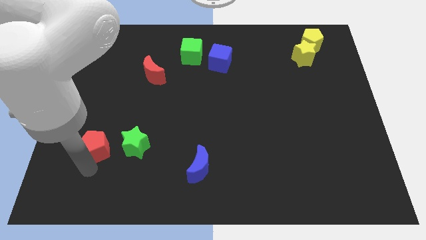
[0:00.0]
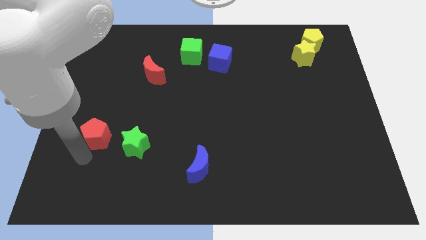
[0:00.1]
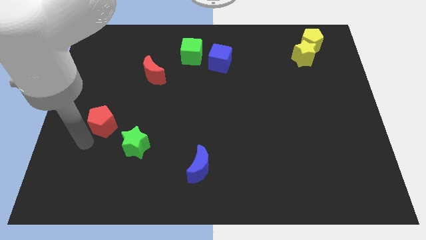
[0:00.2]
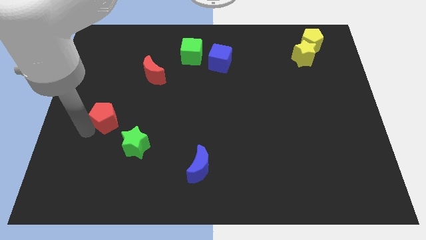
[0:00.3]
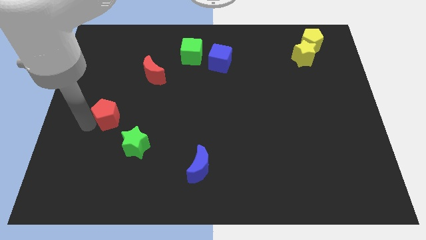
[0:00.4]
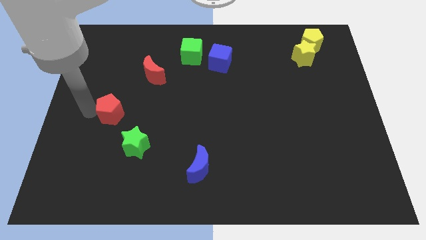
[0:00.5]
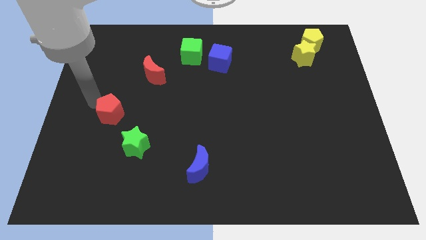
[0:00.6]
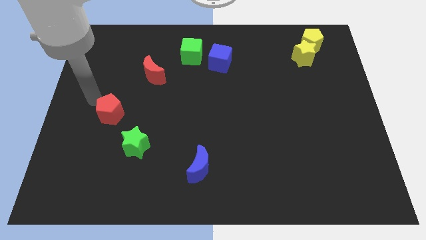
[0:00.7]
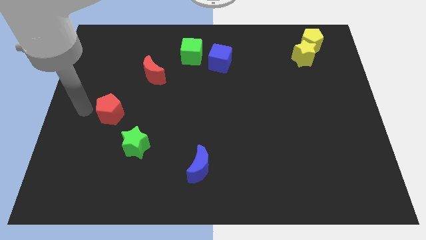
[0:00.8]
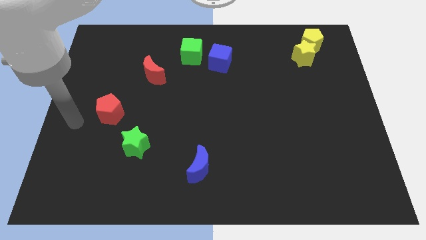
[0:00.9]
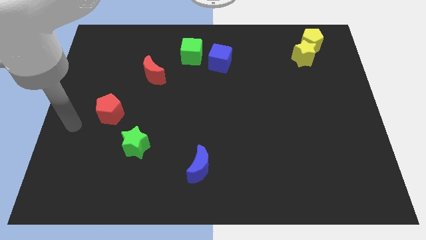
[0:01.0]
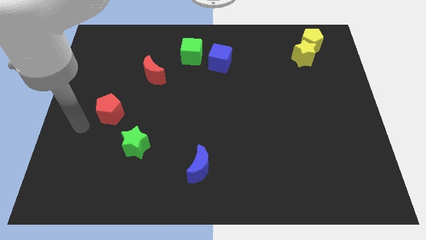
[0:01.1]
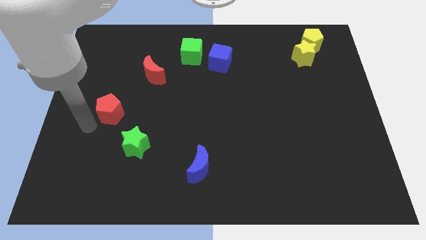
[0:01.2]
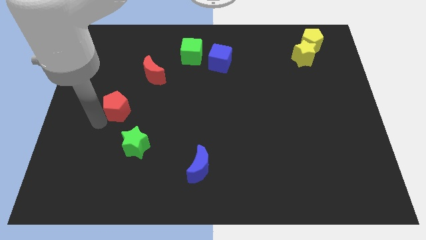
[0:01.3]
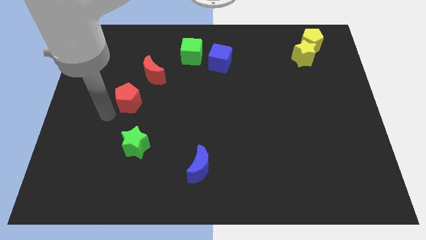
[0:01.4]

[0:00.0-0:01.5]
slightly push the red pentagon top of the board

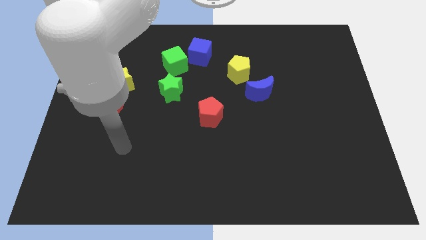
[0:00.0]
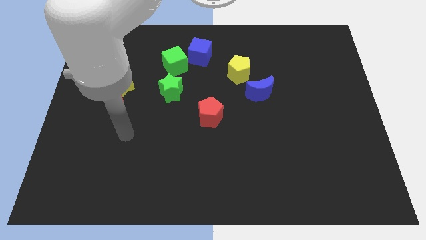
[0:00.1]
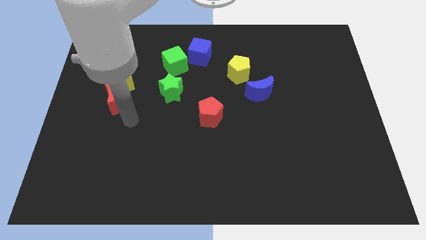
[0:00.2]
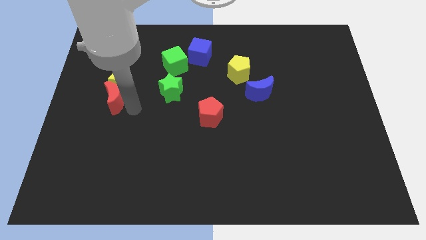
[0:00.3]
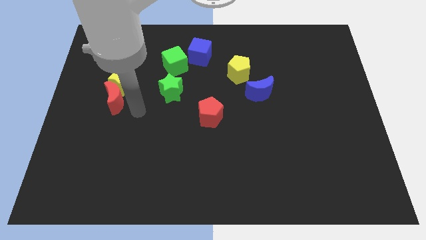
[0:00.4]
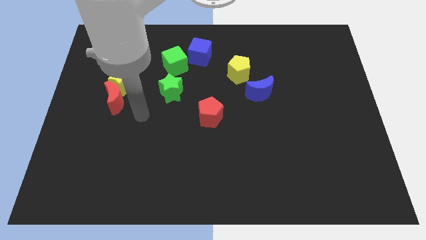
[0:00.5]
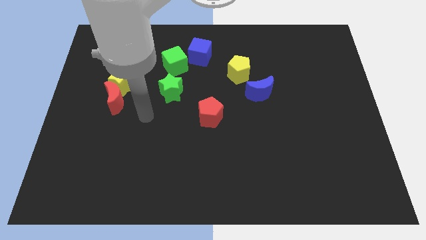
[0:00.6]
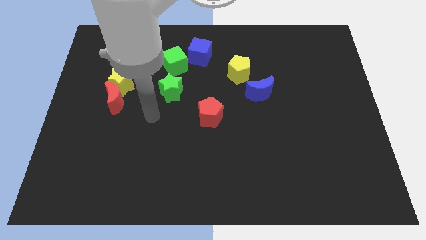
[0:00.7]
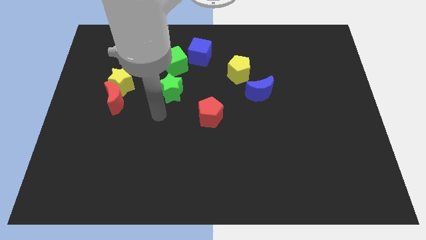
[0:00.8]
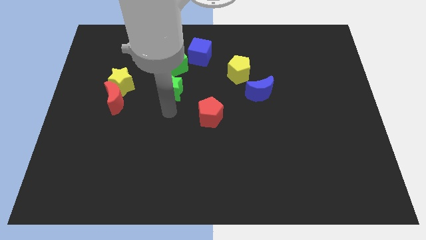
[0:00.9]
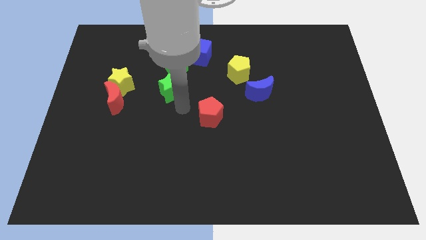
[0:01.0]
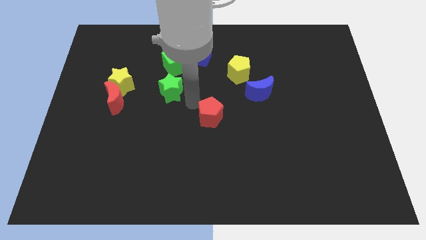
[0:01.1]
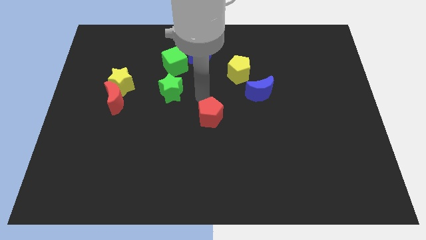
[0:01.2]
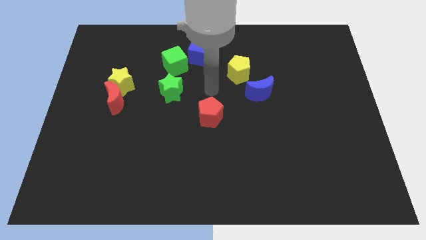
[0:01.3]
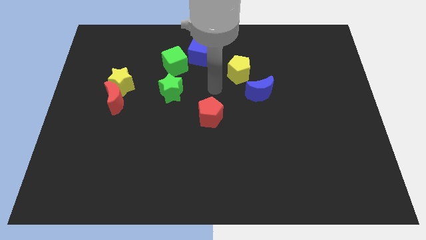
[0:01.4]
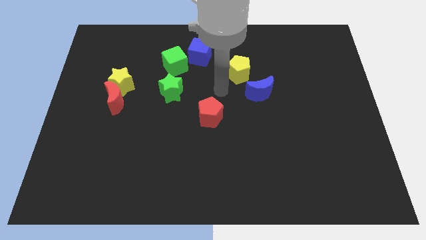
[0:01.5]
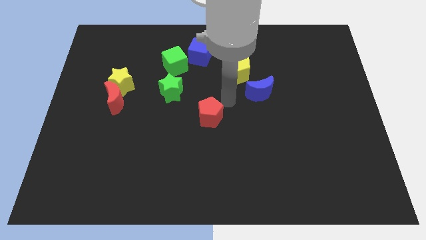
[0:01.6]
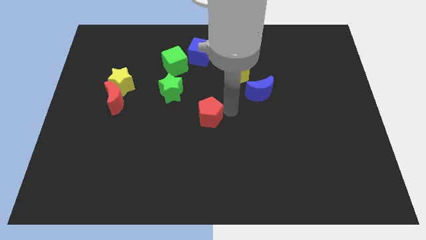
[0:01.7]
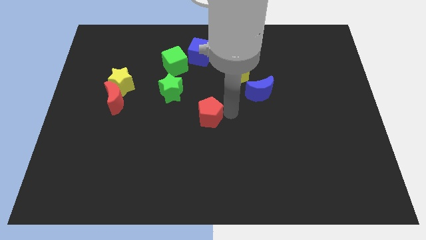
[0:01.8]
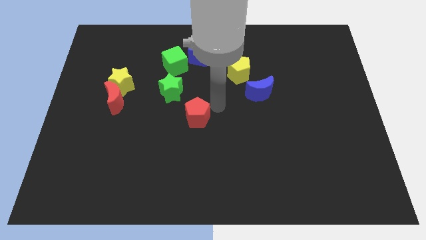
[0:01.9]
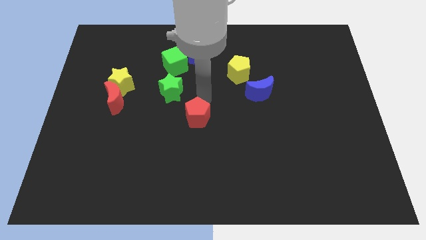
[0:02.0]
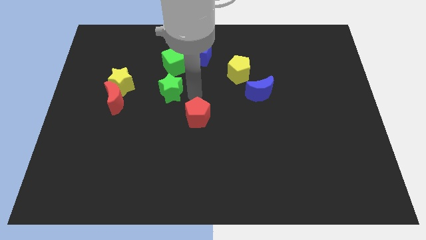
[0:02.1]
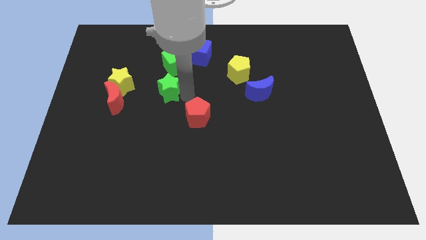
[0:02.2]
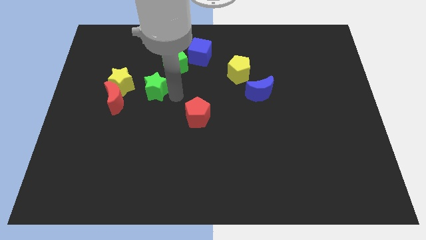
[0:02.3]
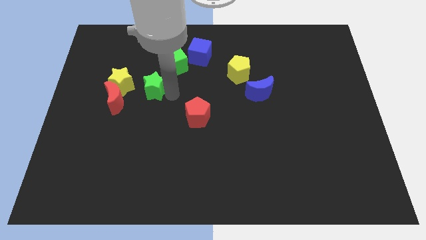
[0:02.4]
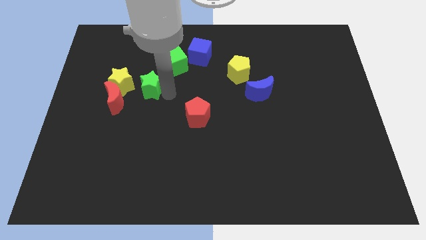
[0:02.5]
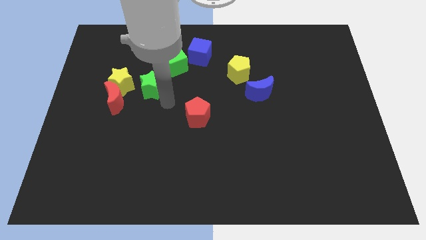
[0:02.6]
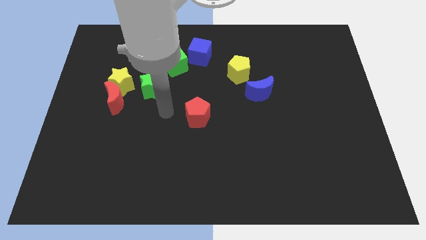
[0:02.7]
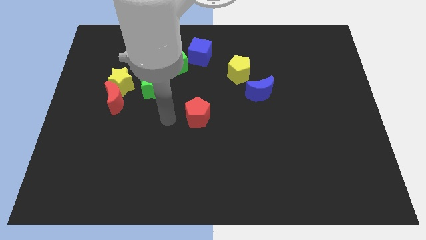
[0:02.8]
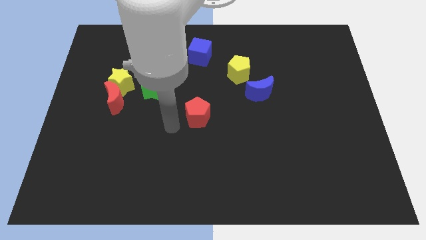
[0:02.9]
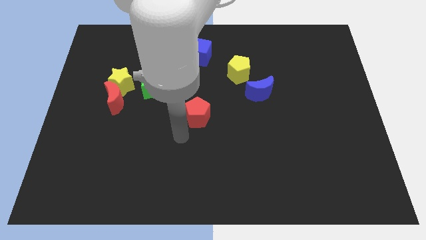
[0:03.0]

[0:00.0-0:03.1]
push the green star slightly close to the yellow star

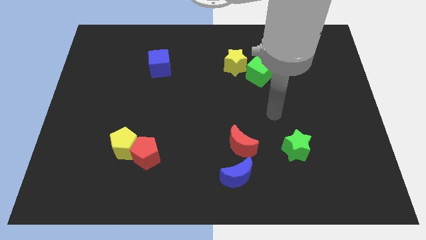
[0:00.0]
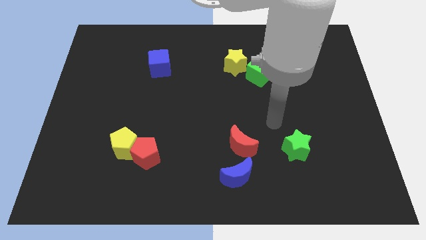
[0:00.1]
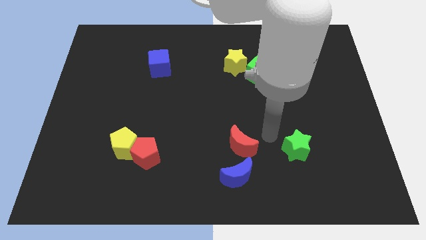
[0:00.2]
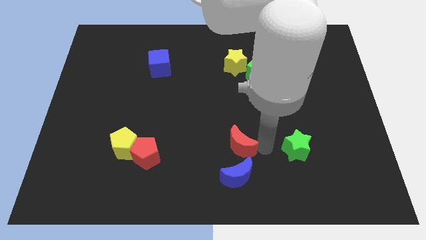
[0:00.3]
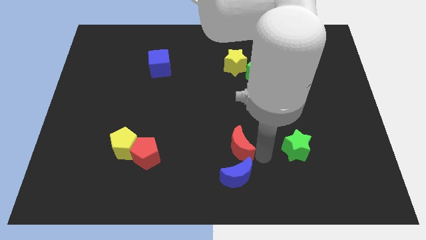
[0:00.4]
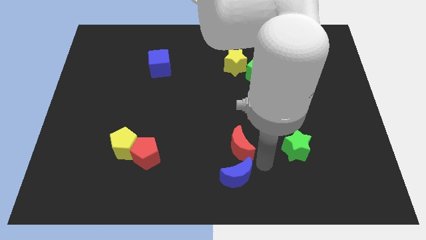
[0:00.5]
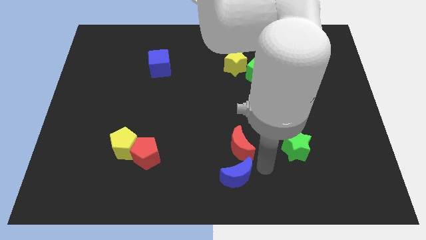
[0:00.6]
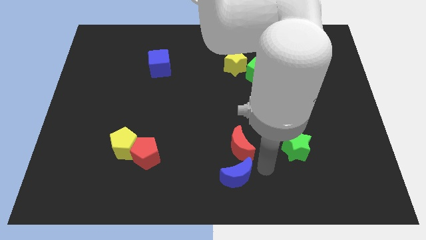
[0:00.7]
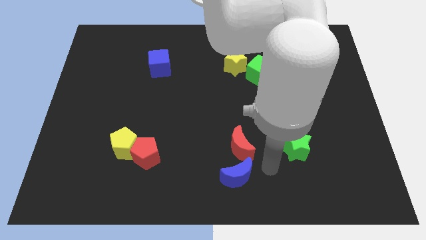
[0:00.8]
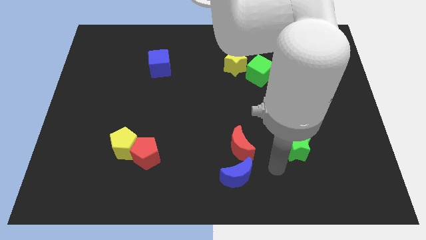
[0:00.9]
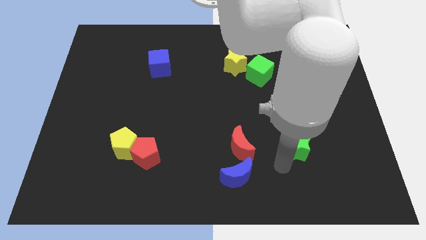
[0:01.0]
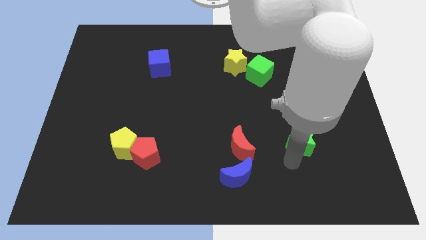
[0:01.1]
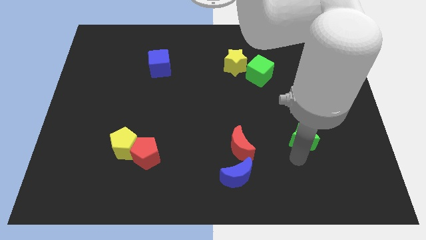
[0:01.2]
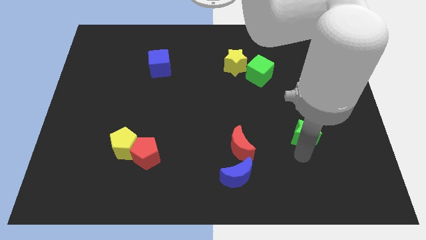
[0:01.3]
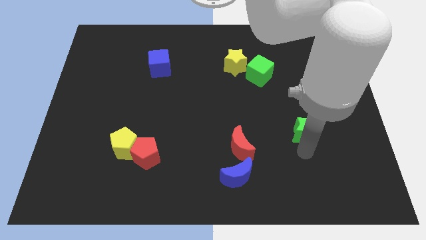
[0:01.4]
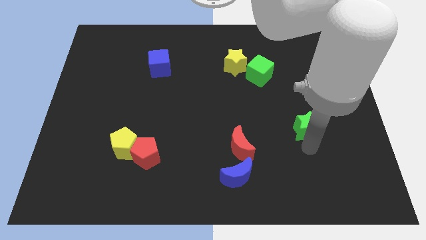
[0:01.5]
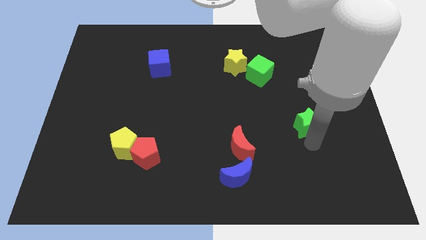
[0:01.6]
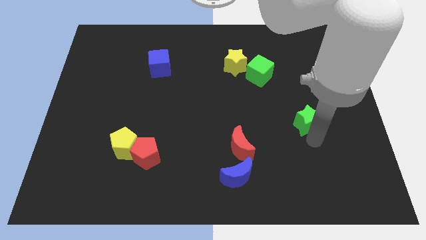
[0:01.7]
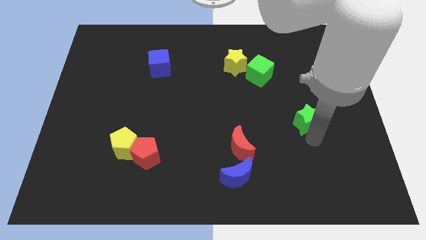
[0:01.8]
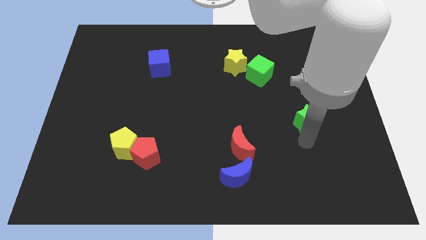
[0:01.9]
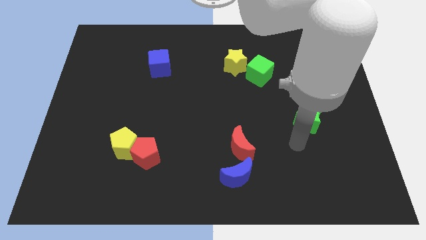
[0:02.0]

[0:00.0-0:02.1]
slide the green star diagonally top right to the red crescent

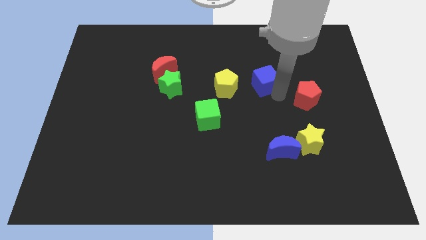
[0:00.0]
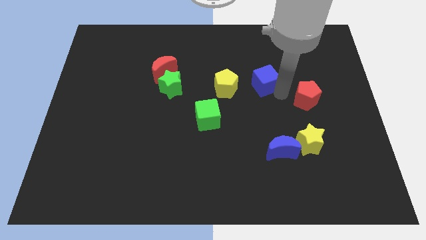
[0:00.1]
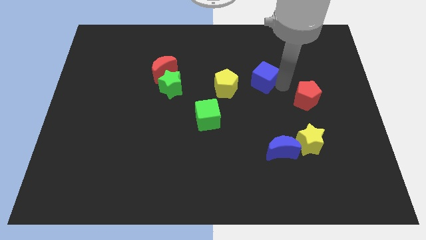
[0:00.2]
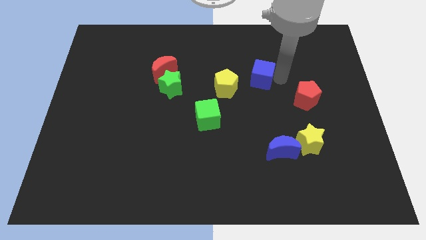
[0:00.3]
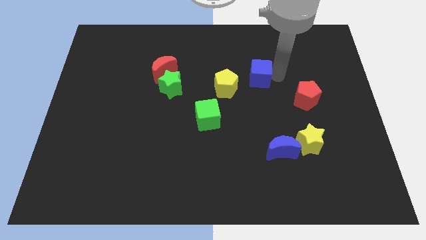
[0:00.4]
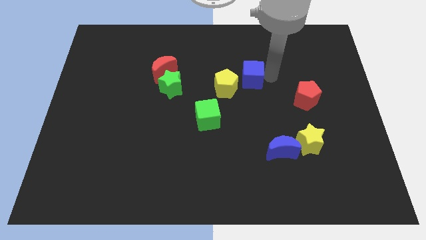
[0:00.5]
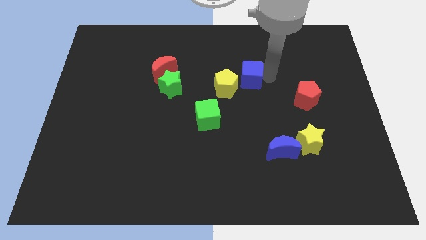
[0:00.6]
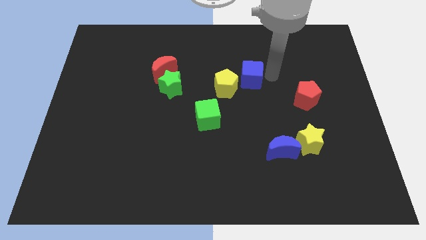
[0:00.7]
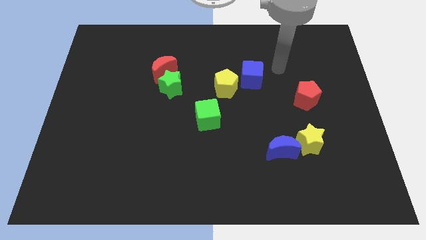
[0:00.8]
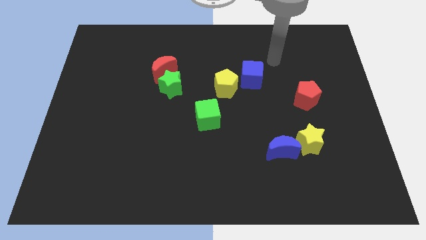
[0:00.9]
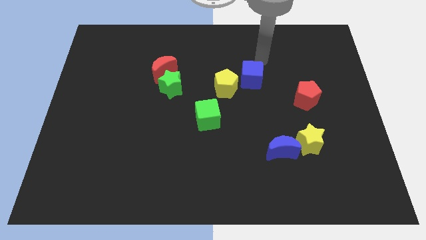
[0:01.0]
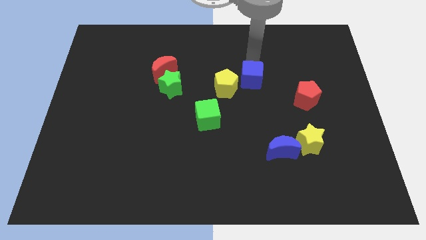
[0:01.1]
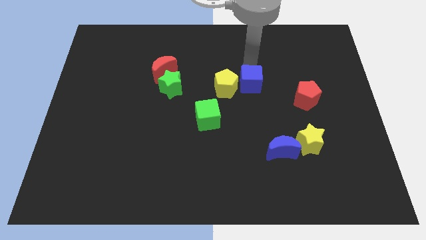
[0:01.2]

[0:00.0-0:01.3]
push blue cube close to the left of the yellow pentagon

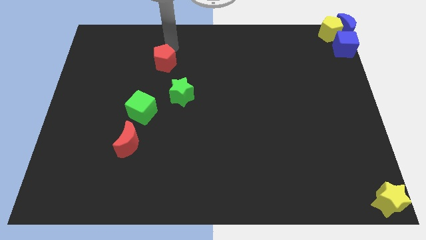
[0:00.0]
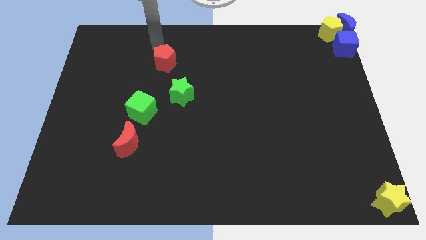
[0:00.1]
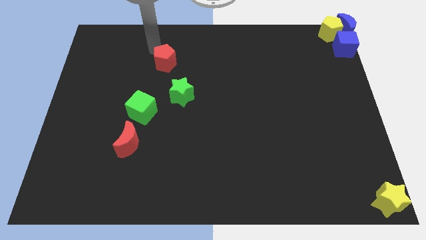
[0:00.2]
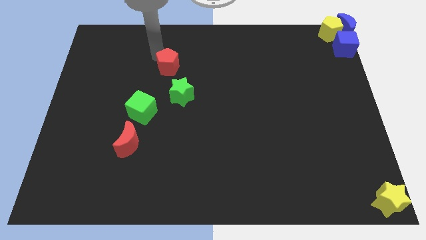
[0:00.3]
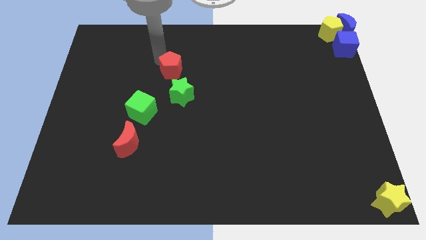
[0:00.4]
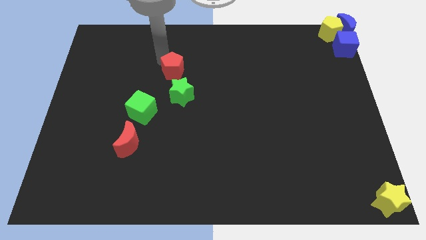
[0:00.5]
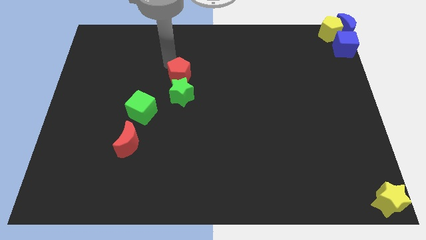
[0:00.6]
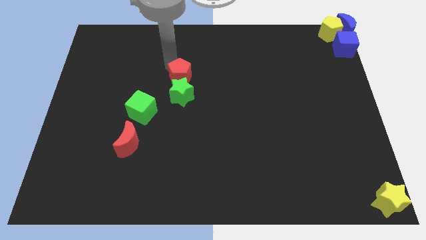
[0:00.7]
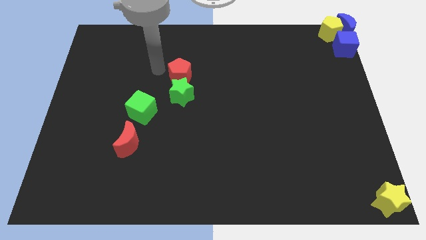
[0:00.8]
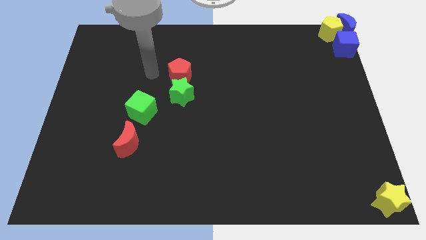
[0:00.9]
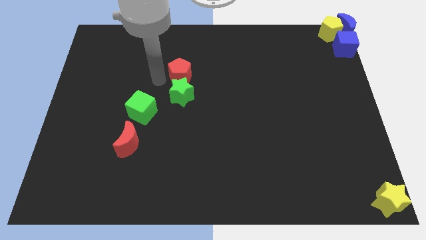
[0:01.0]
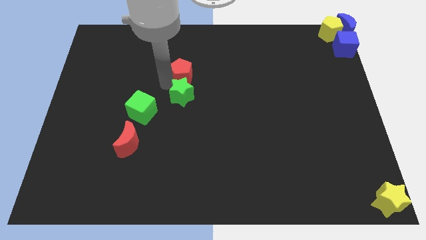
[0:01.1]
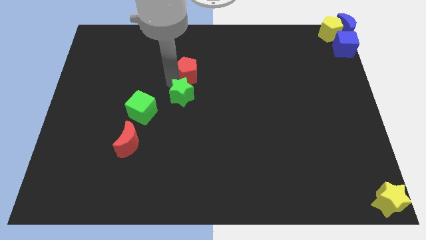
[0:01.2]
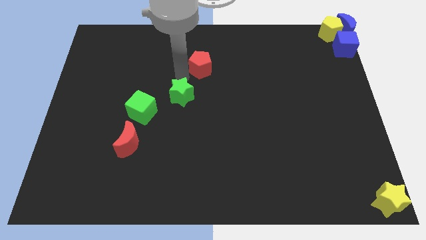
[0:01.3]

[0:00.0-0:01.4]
move the red pentagon to the top of green star
